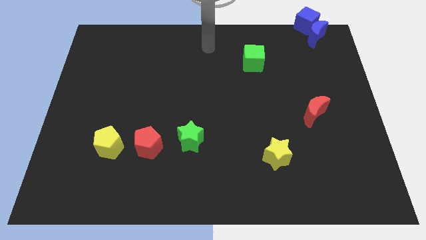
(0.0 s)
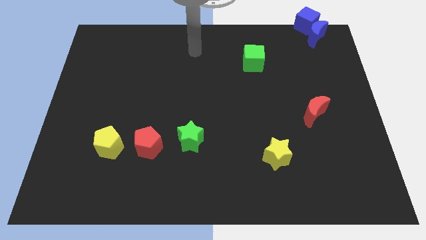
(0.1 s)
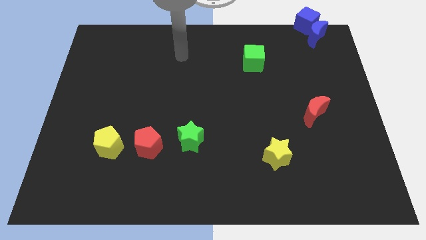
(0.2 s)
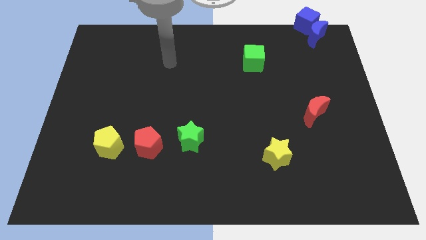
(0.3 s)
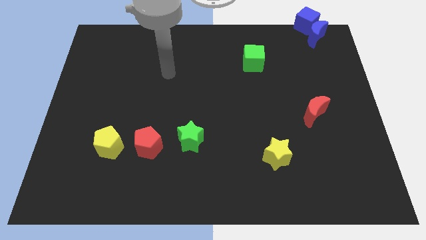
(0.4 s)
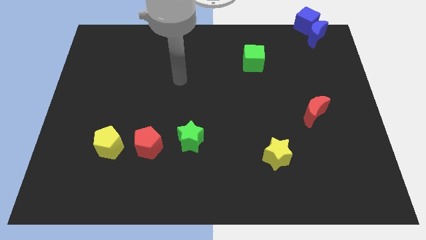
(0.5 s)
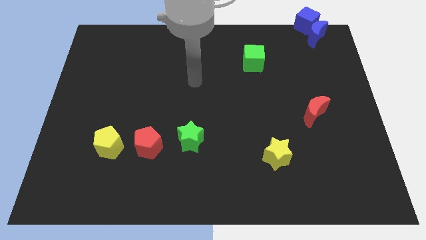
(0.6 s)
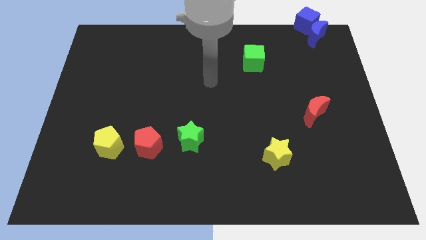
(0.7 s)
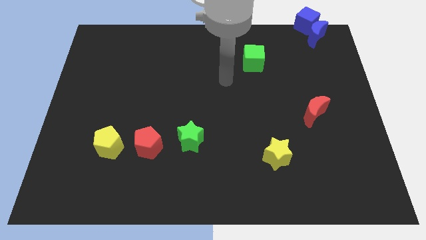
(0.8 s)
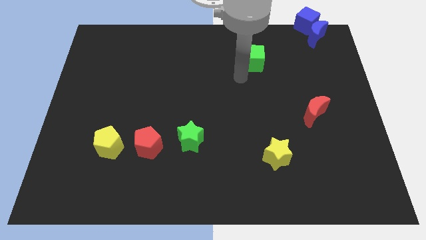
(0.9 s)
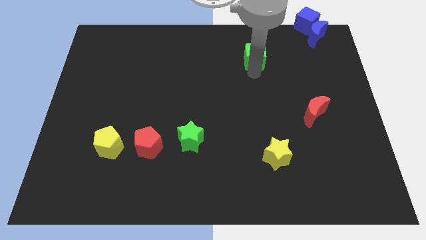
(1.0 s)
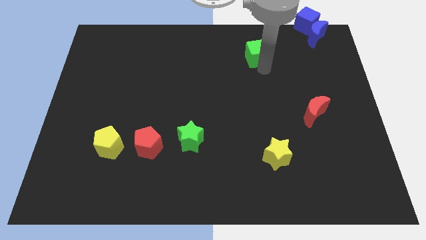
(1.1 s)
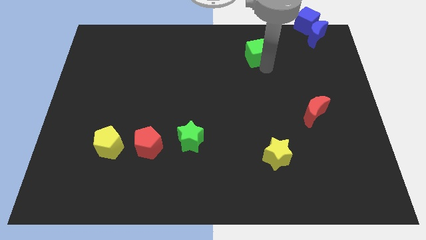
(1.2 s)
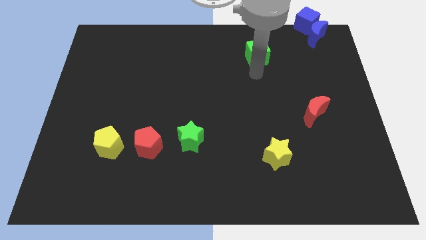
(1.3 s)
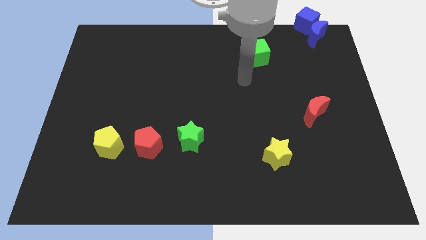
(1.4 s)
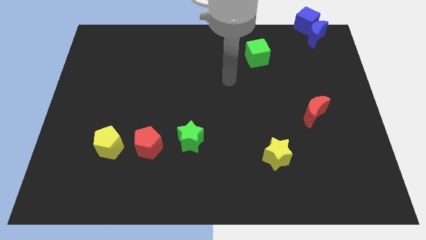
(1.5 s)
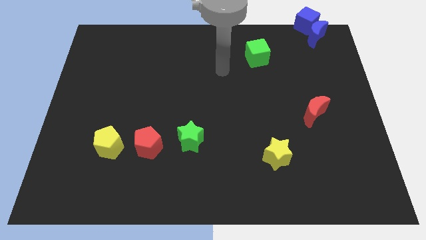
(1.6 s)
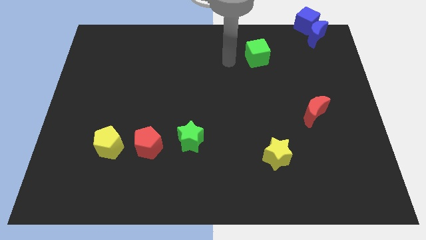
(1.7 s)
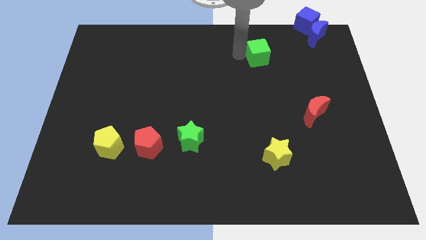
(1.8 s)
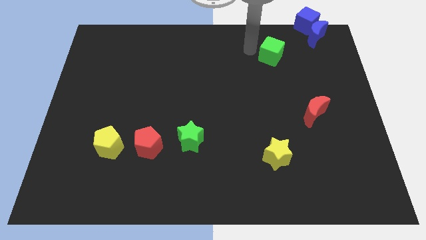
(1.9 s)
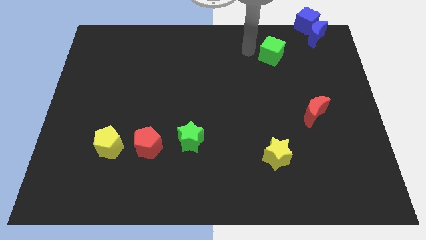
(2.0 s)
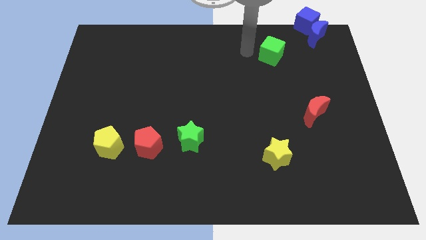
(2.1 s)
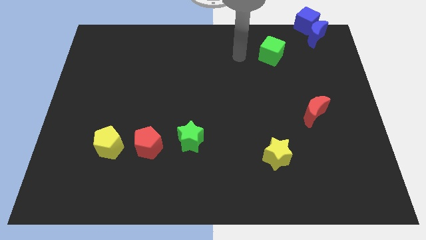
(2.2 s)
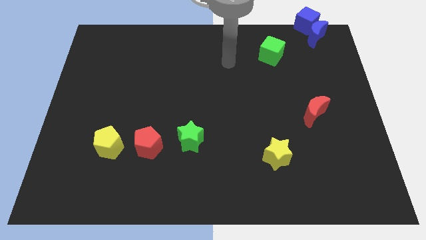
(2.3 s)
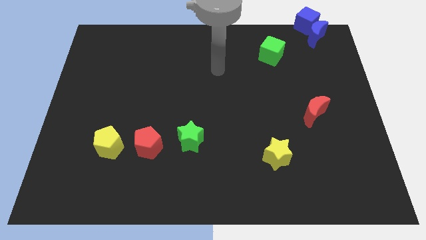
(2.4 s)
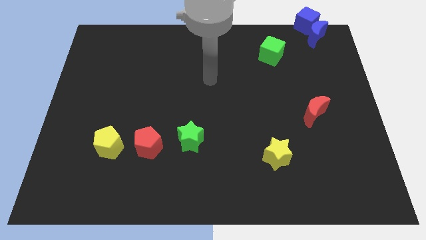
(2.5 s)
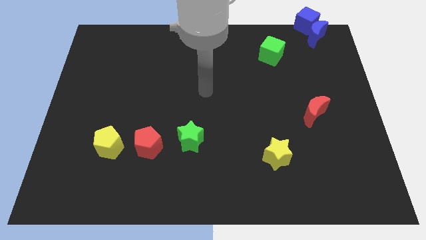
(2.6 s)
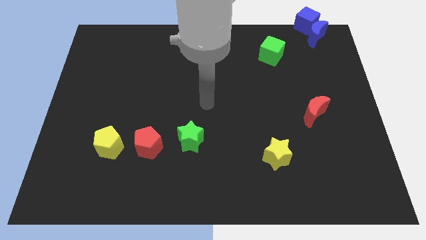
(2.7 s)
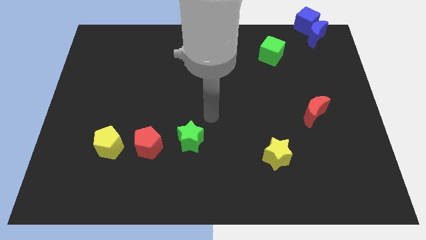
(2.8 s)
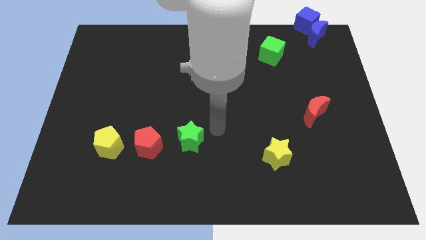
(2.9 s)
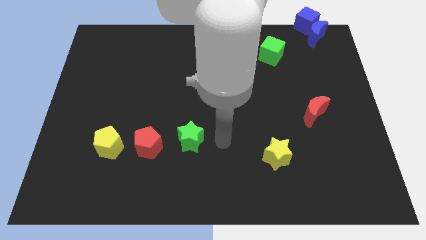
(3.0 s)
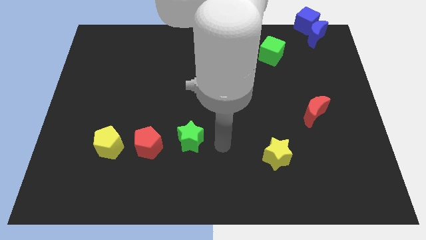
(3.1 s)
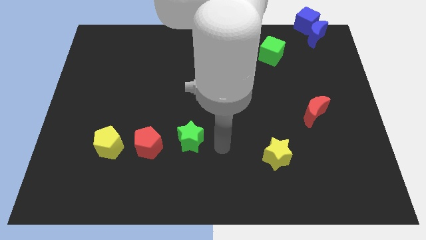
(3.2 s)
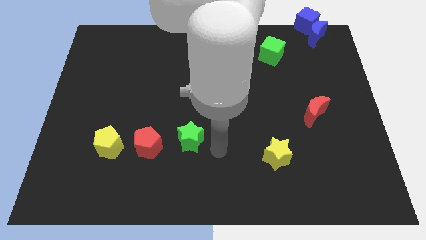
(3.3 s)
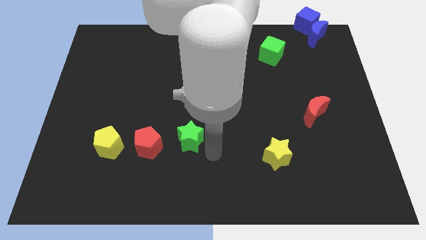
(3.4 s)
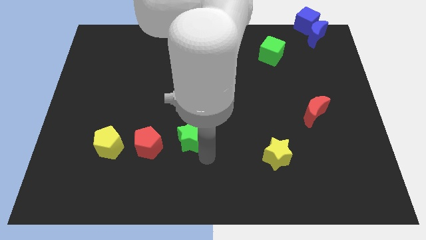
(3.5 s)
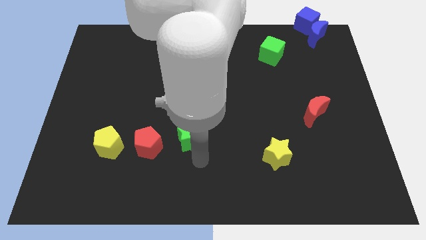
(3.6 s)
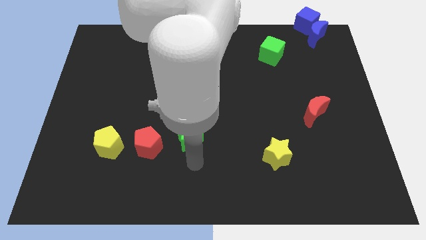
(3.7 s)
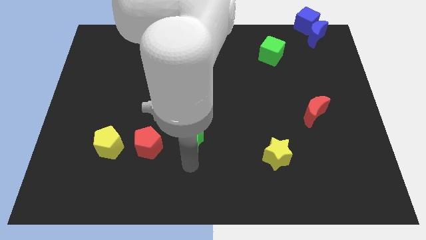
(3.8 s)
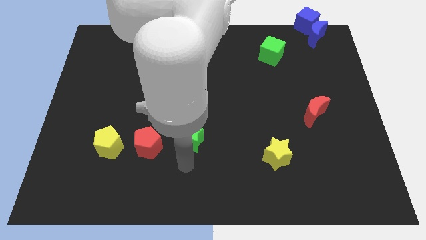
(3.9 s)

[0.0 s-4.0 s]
move your arm below the green star

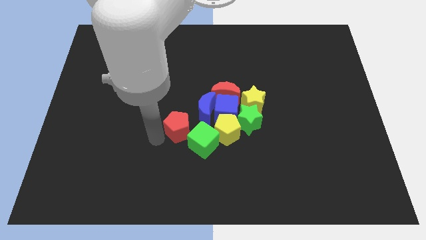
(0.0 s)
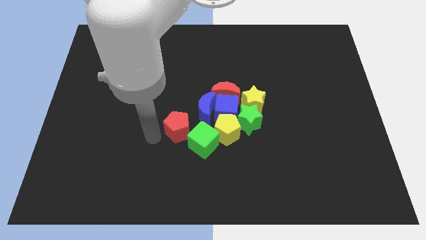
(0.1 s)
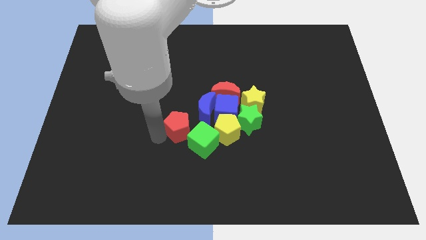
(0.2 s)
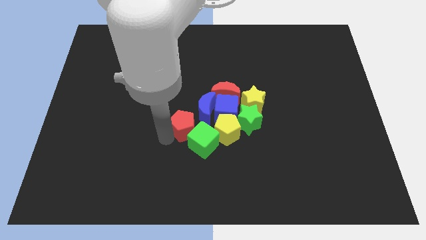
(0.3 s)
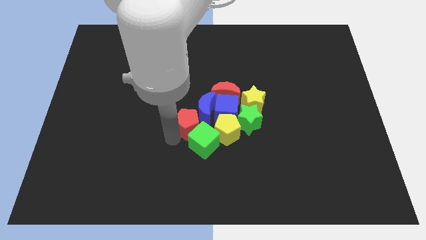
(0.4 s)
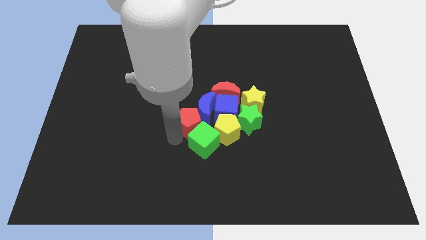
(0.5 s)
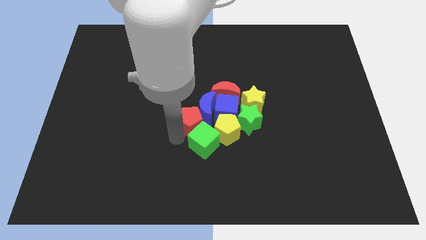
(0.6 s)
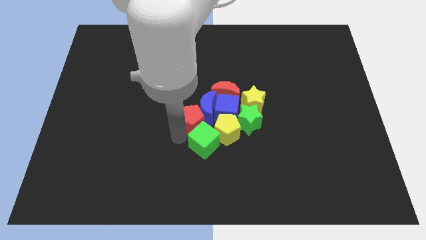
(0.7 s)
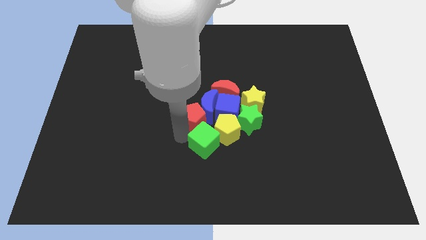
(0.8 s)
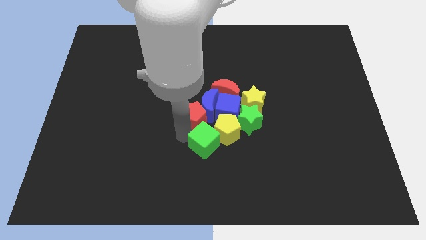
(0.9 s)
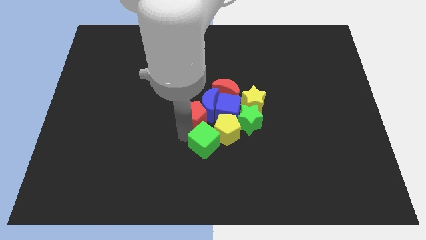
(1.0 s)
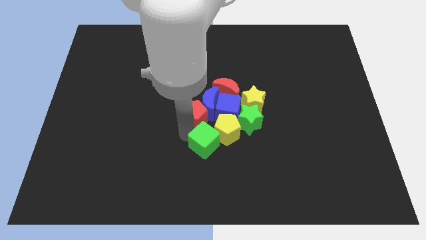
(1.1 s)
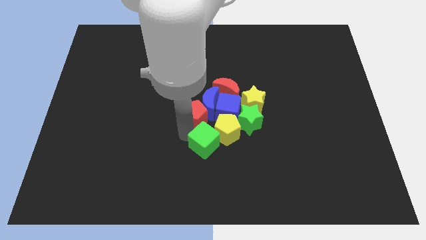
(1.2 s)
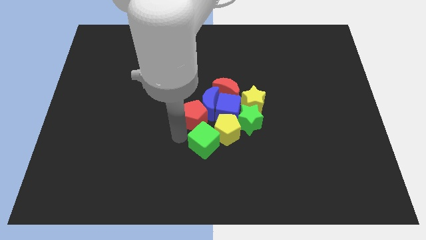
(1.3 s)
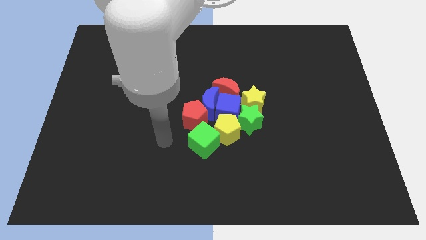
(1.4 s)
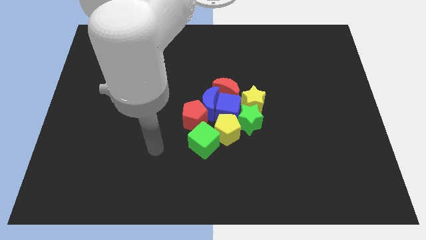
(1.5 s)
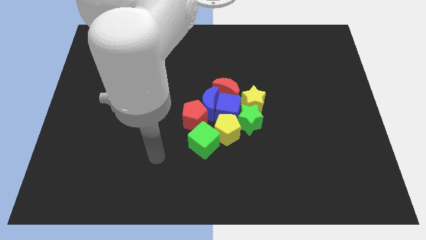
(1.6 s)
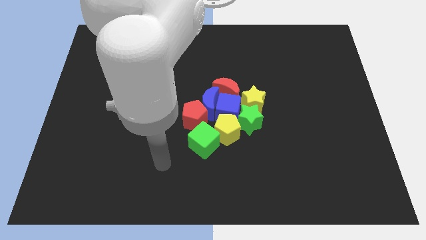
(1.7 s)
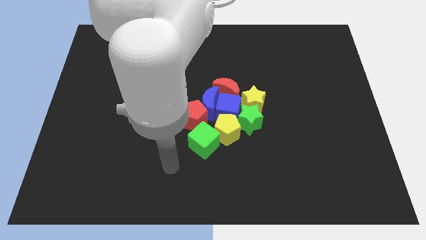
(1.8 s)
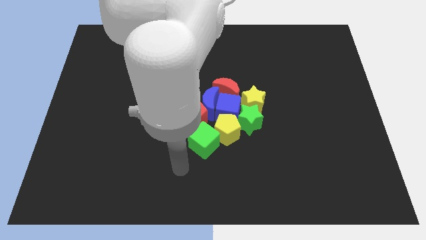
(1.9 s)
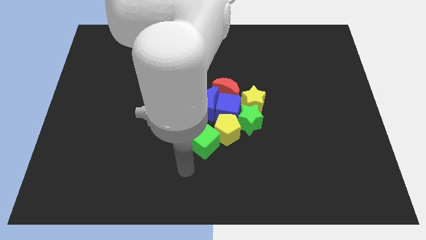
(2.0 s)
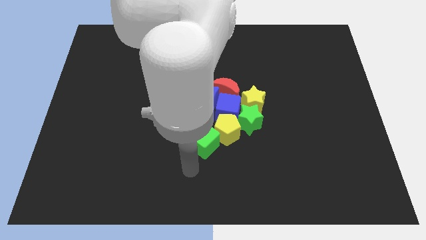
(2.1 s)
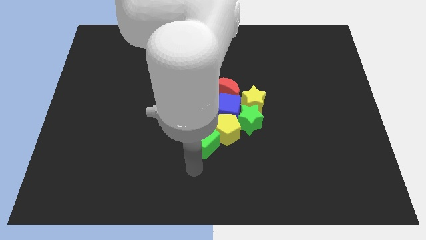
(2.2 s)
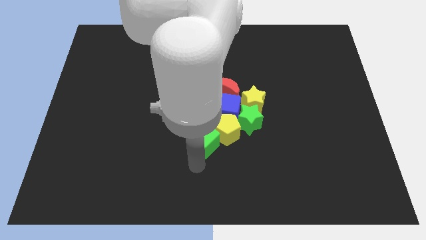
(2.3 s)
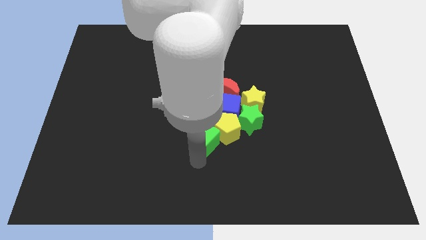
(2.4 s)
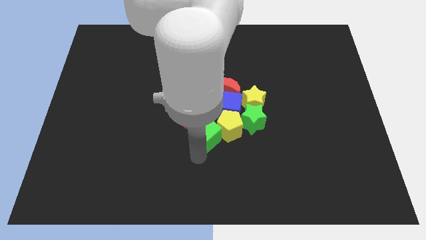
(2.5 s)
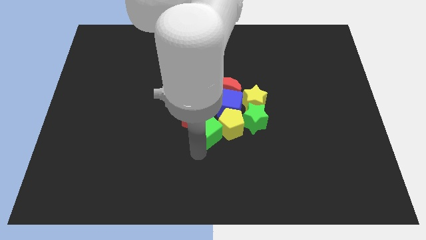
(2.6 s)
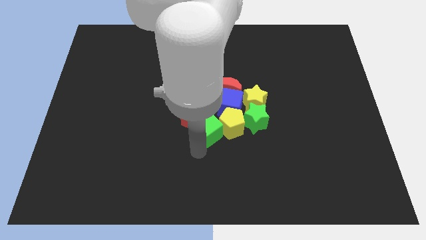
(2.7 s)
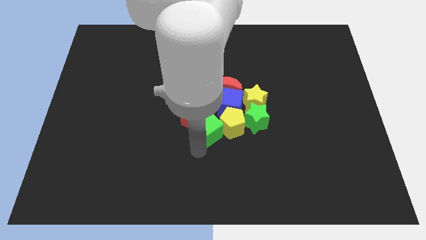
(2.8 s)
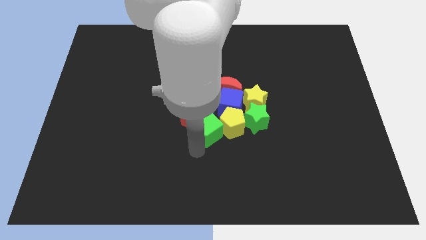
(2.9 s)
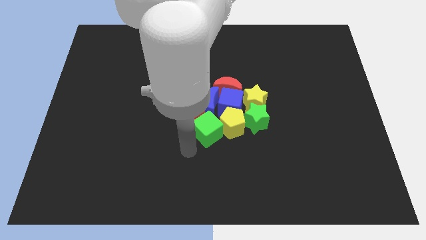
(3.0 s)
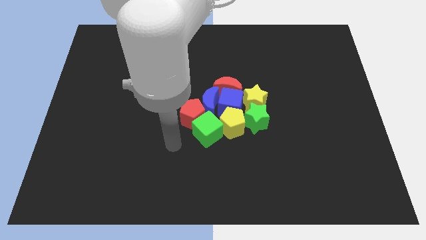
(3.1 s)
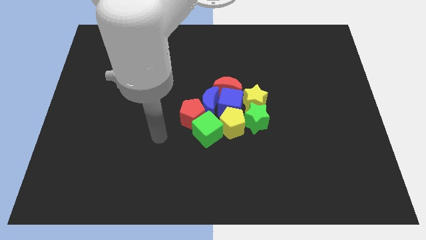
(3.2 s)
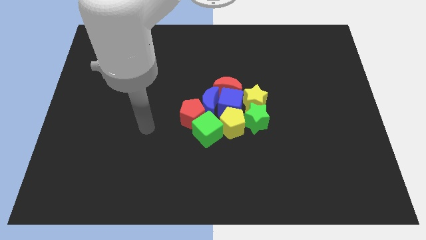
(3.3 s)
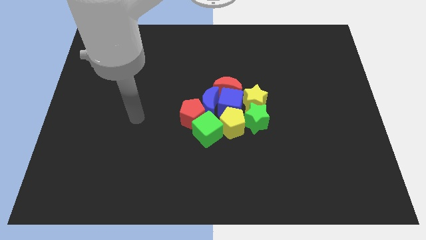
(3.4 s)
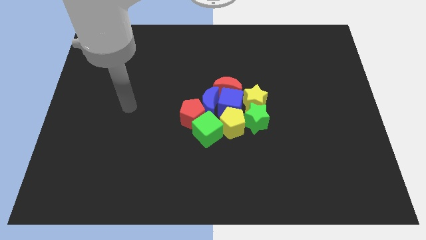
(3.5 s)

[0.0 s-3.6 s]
push the red pentagon and green cube into the group of blocks

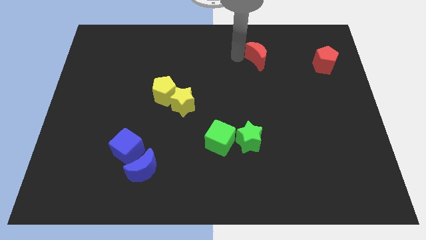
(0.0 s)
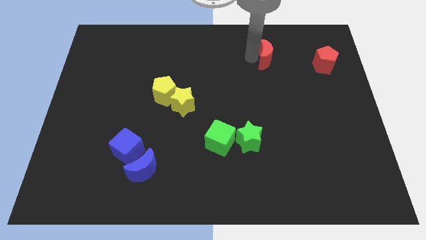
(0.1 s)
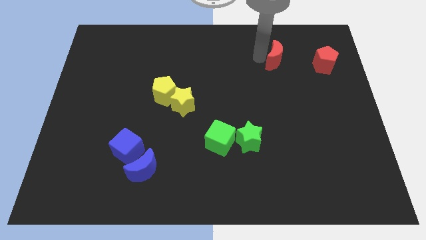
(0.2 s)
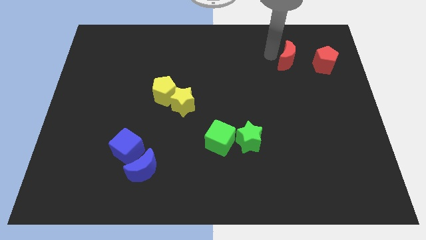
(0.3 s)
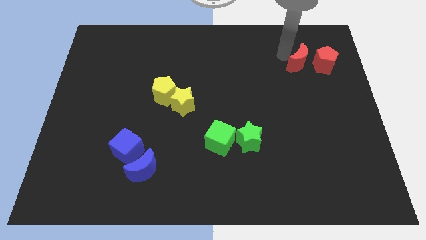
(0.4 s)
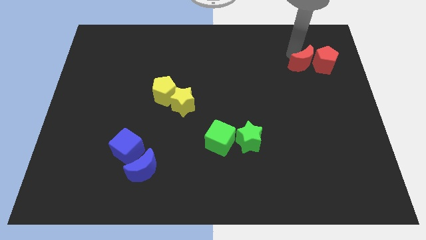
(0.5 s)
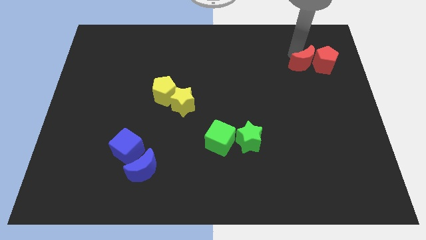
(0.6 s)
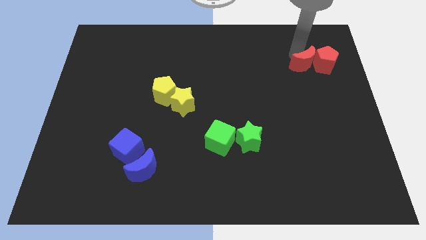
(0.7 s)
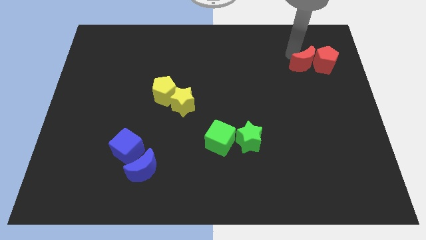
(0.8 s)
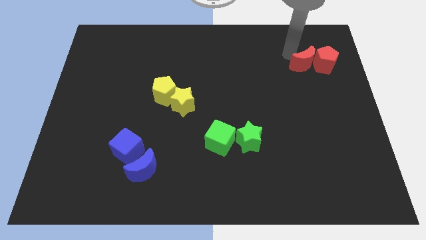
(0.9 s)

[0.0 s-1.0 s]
push the red moon towards red pentagon at the top right corner

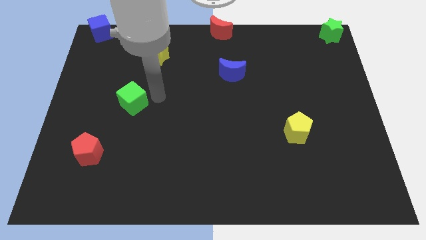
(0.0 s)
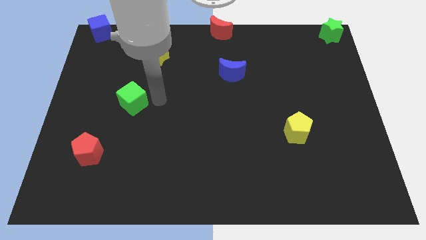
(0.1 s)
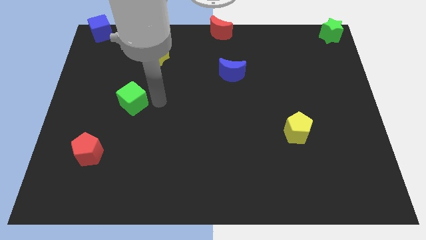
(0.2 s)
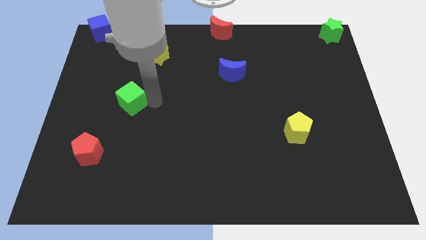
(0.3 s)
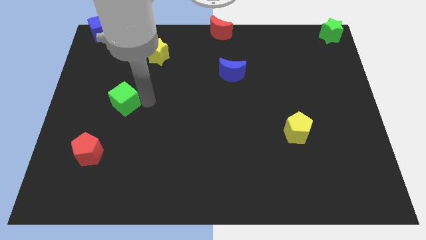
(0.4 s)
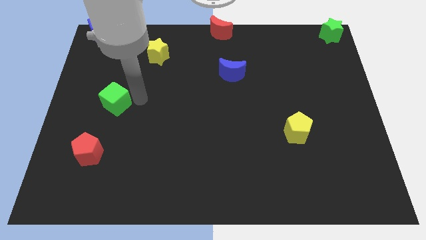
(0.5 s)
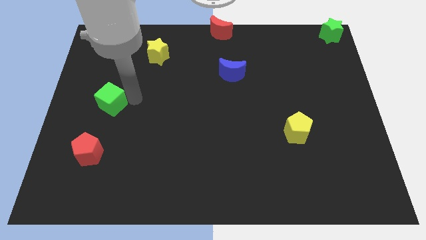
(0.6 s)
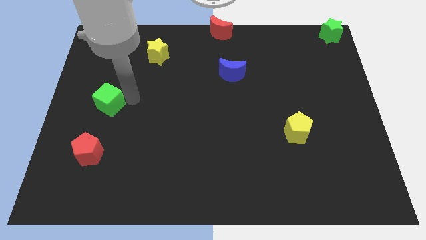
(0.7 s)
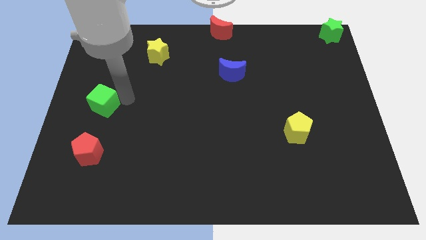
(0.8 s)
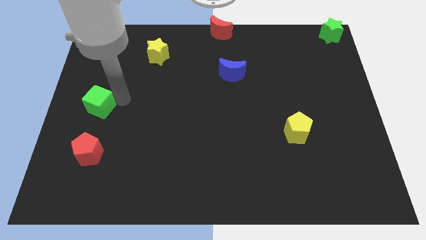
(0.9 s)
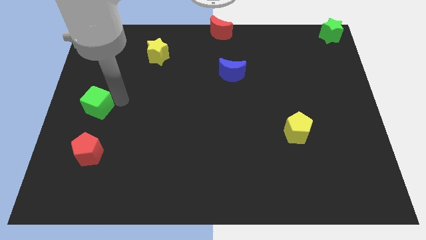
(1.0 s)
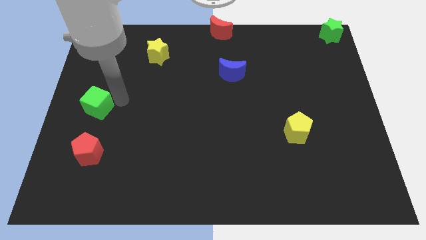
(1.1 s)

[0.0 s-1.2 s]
place the green cube above the red pentagon
